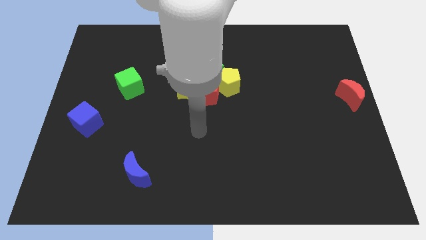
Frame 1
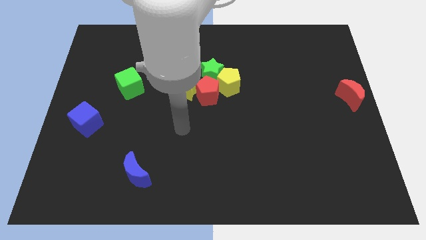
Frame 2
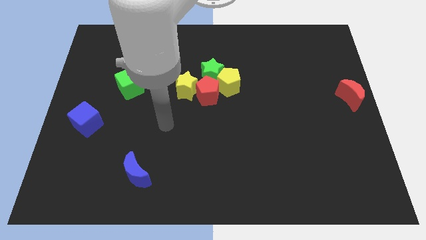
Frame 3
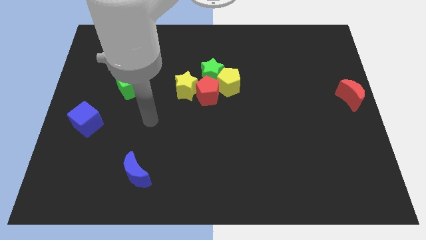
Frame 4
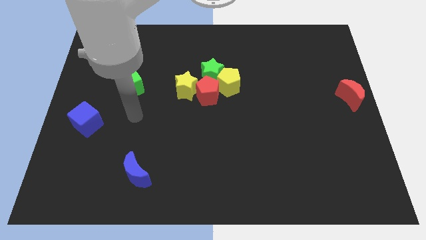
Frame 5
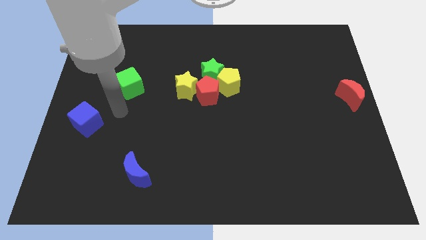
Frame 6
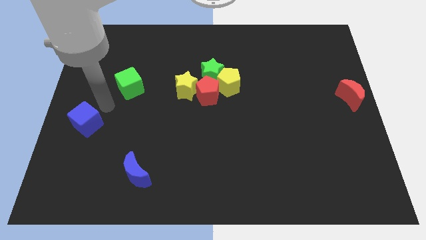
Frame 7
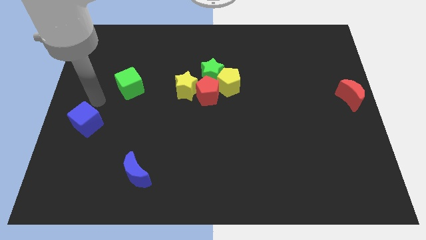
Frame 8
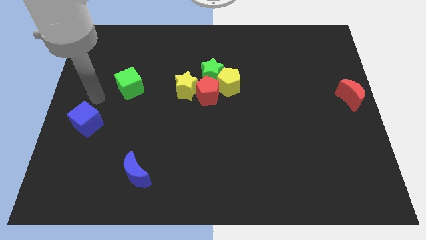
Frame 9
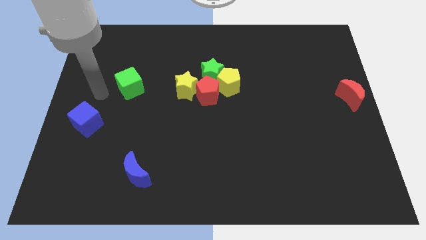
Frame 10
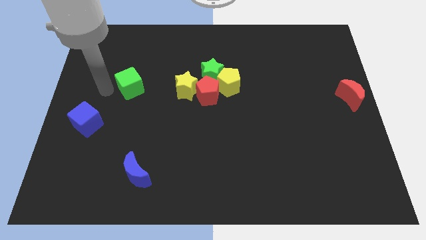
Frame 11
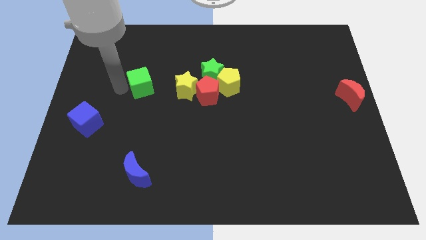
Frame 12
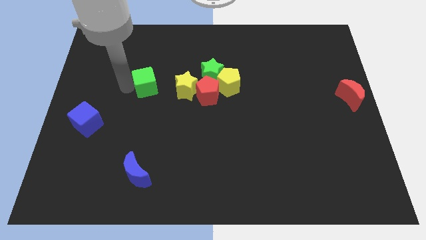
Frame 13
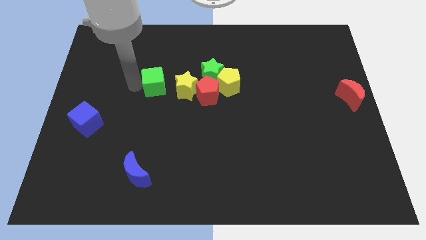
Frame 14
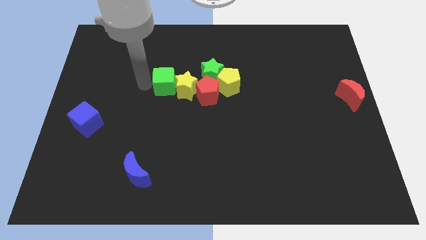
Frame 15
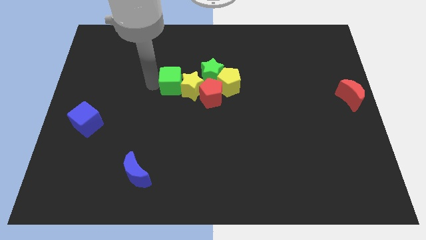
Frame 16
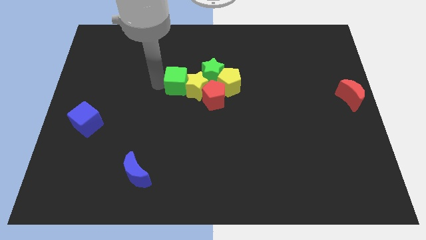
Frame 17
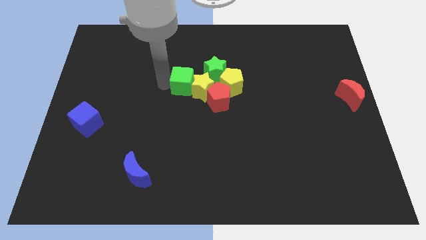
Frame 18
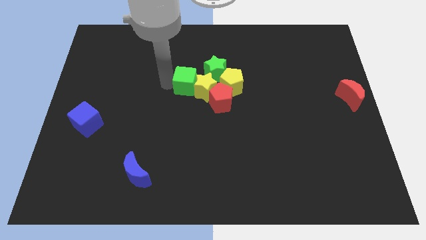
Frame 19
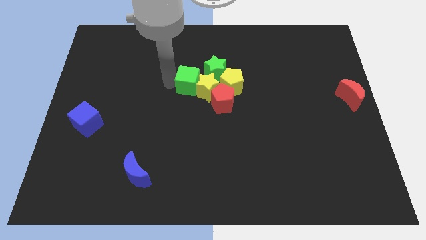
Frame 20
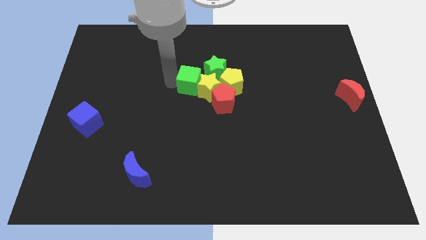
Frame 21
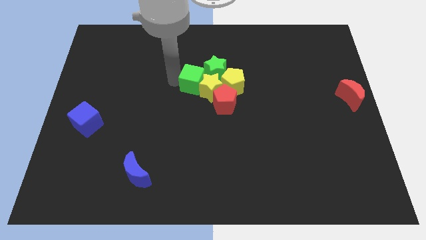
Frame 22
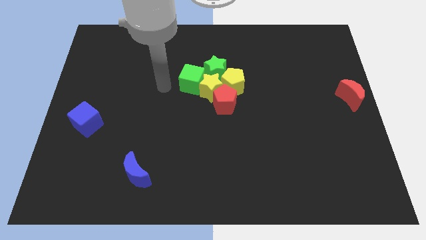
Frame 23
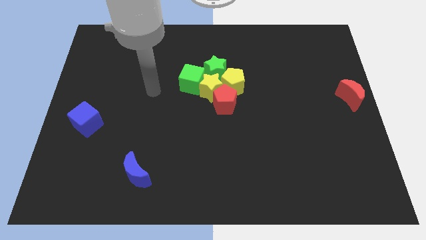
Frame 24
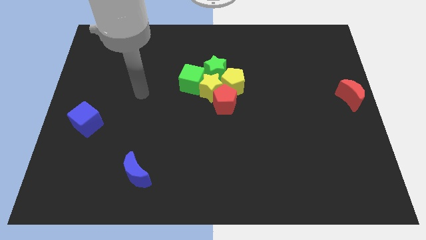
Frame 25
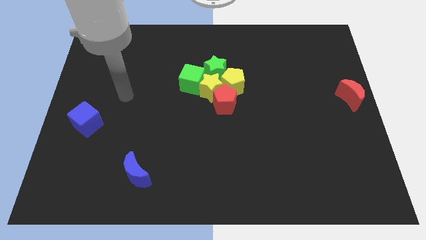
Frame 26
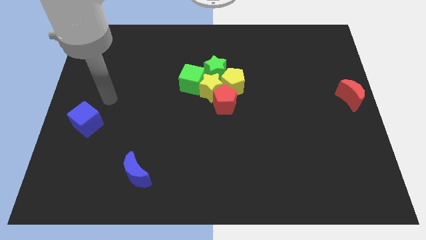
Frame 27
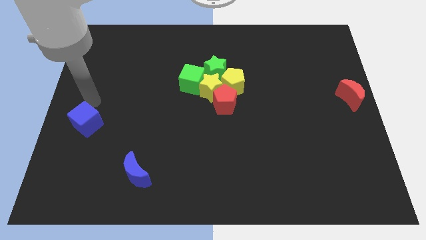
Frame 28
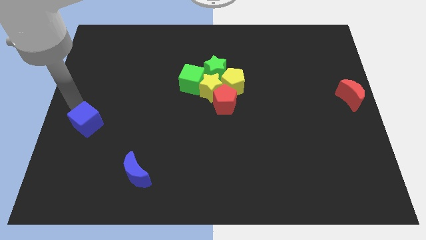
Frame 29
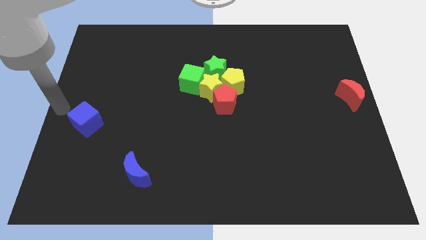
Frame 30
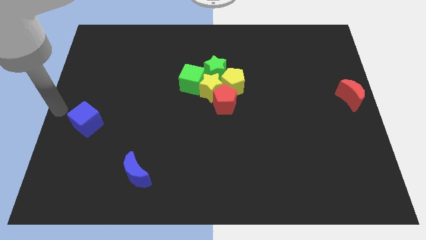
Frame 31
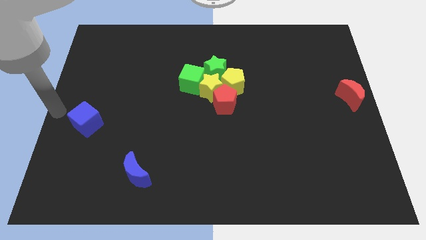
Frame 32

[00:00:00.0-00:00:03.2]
move the green cube into group of blocks

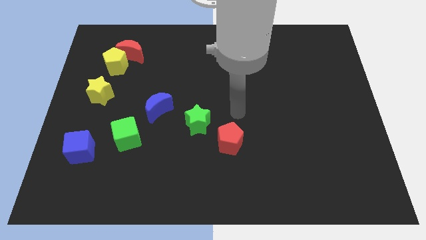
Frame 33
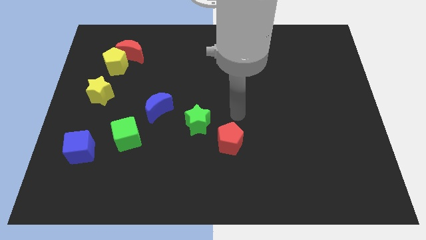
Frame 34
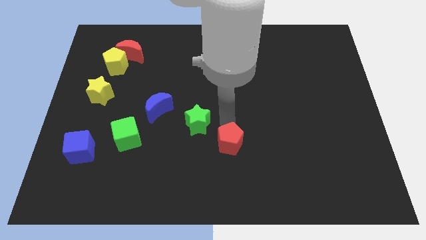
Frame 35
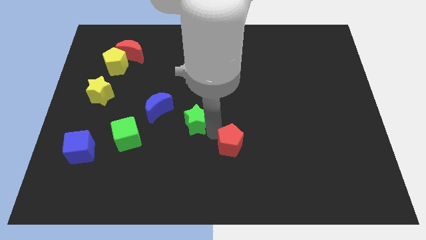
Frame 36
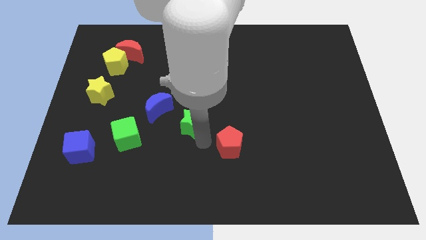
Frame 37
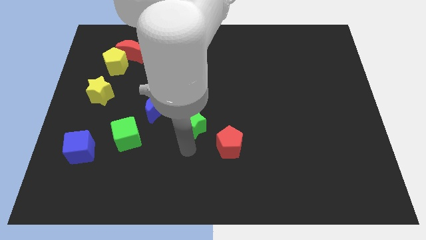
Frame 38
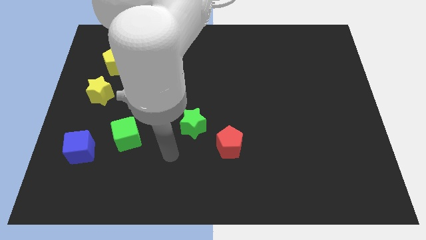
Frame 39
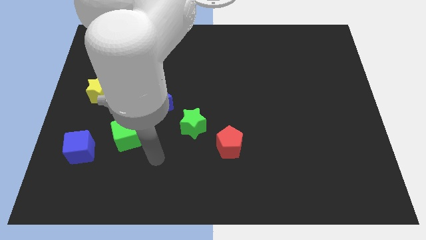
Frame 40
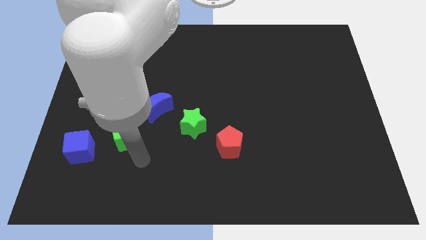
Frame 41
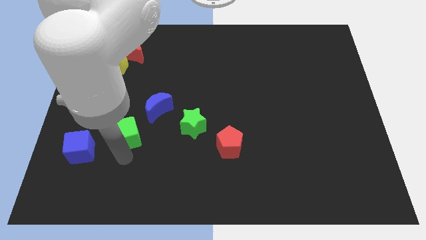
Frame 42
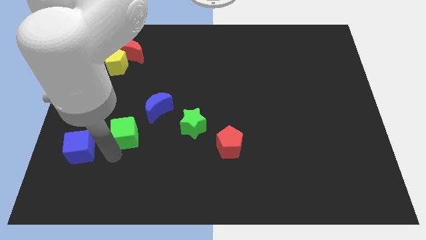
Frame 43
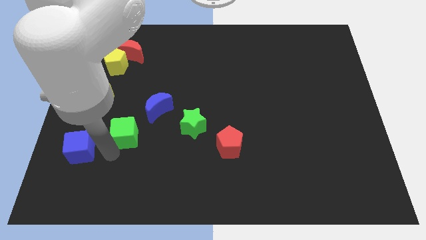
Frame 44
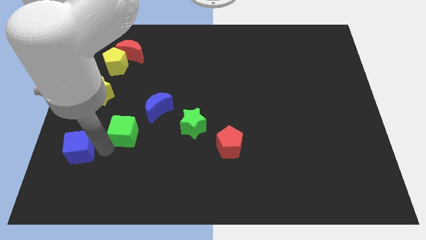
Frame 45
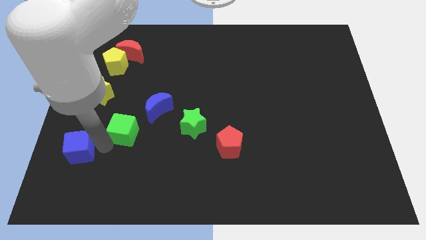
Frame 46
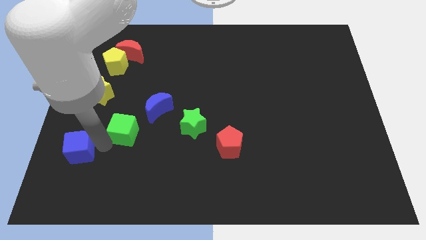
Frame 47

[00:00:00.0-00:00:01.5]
place the green cube diagonally to blue cube

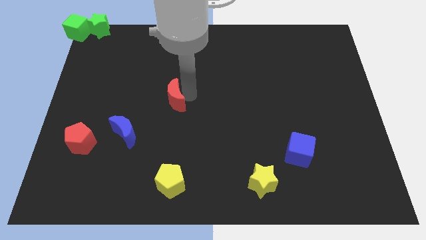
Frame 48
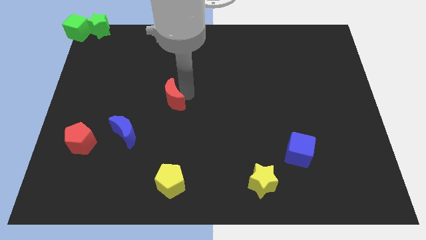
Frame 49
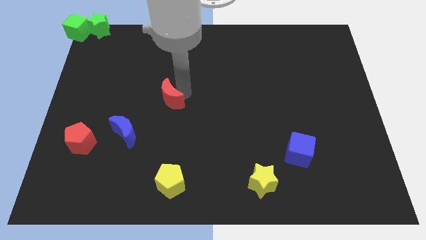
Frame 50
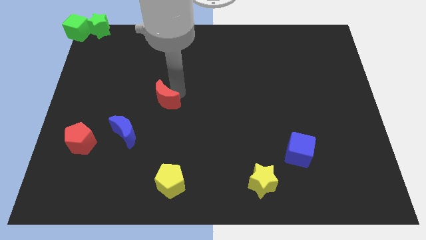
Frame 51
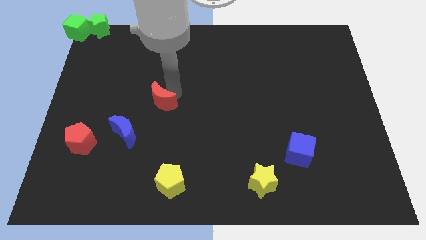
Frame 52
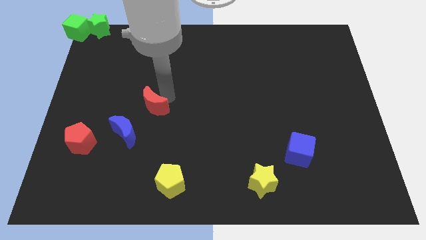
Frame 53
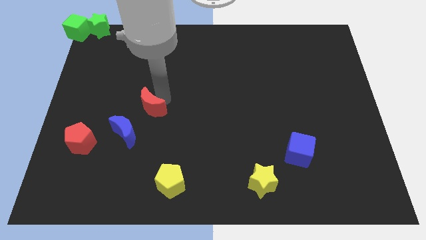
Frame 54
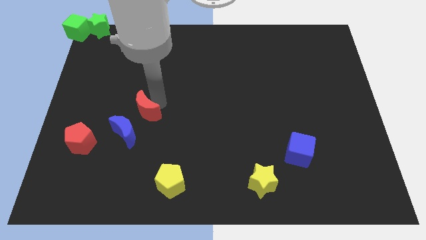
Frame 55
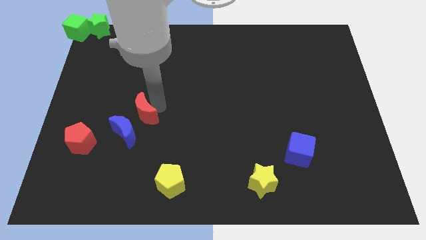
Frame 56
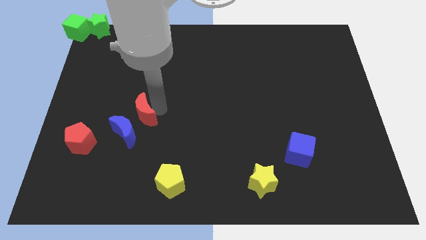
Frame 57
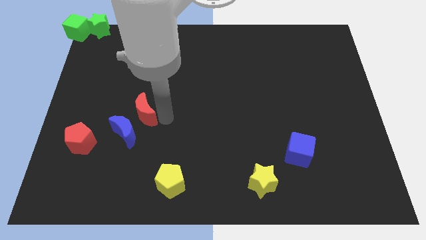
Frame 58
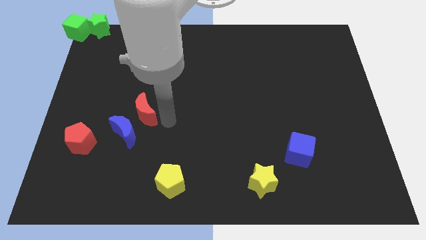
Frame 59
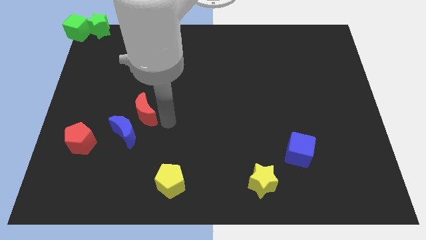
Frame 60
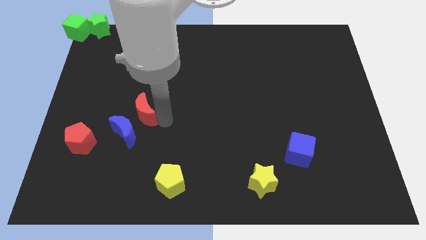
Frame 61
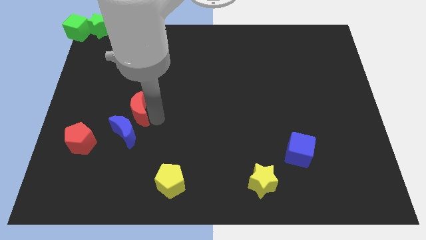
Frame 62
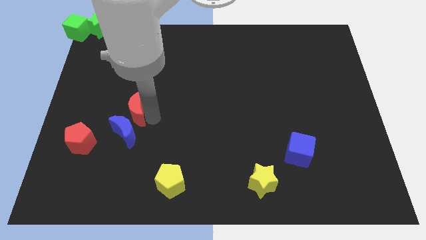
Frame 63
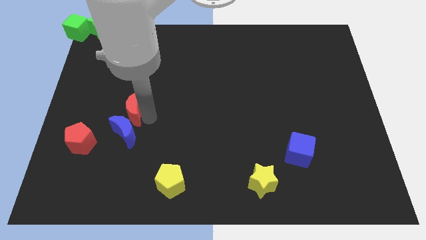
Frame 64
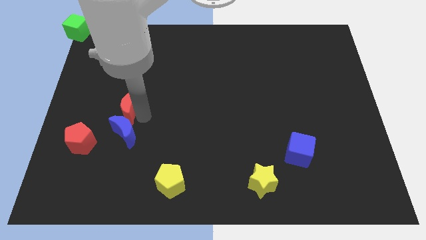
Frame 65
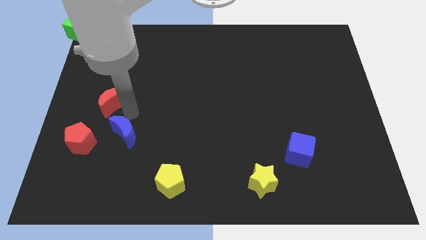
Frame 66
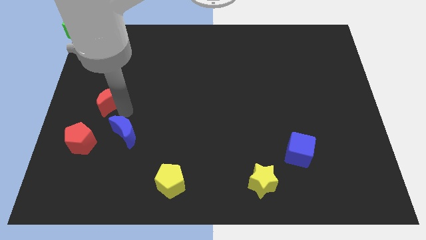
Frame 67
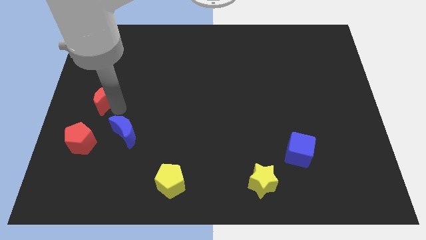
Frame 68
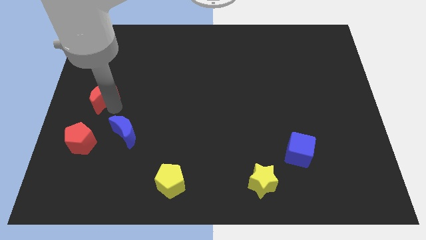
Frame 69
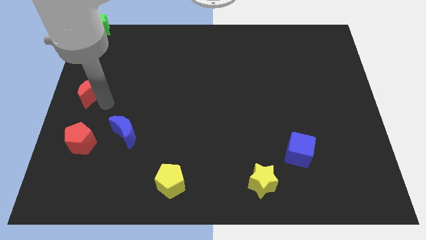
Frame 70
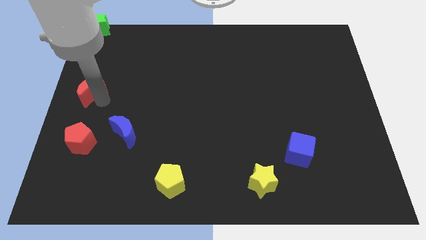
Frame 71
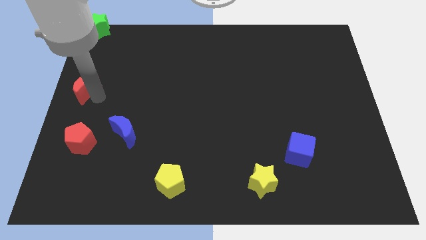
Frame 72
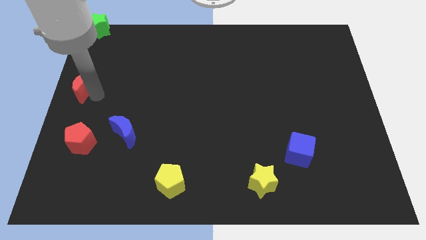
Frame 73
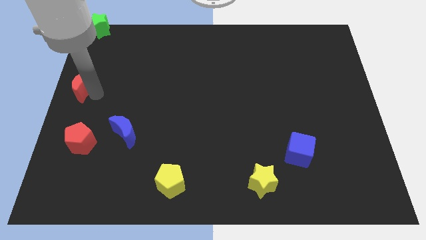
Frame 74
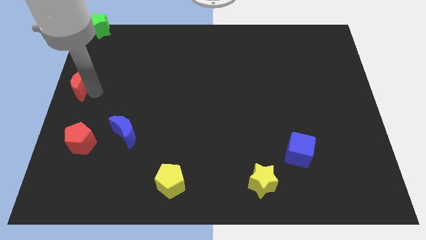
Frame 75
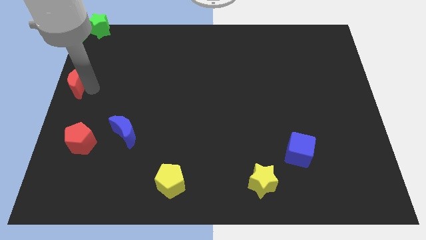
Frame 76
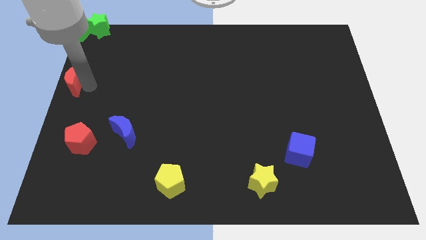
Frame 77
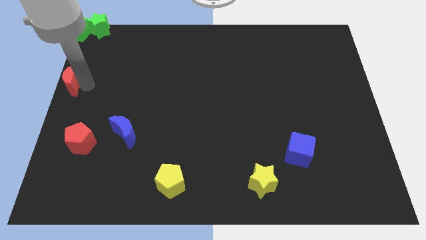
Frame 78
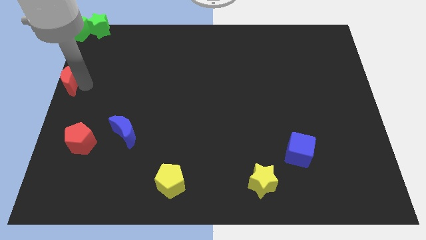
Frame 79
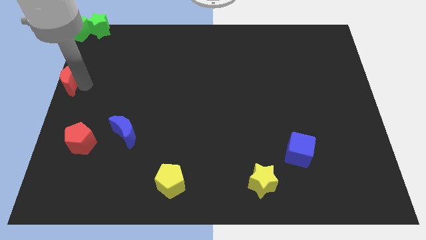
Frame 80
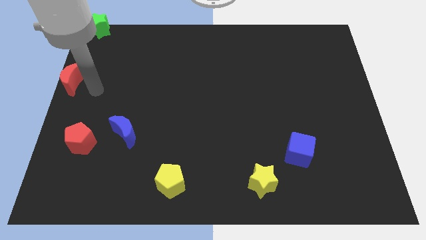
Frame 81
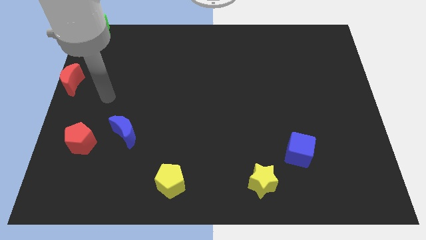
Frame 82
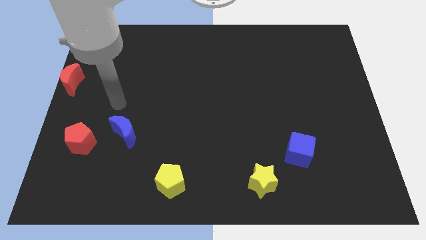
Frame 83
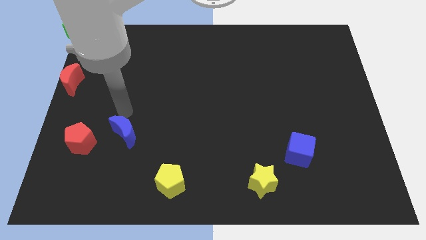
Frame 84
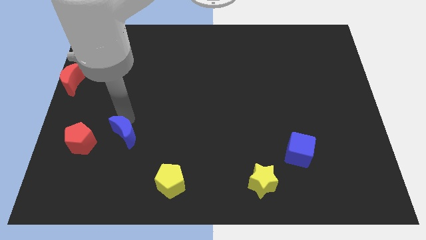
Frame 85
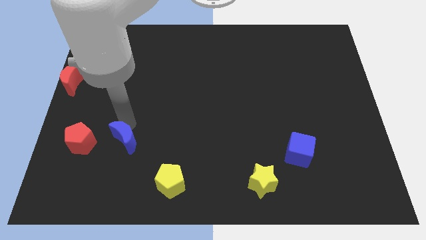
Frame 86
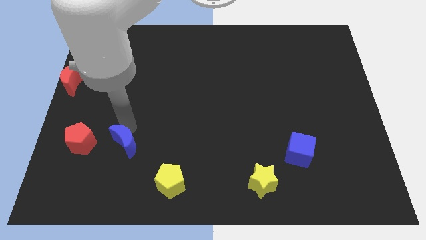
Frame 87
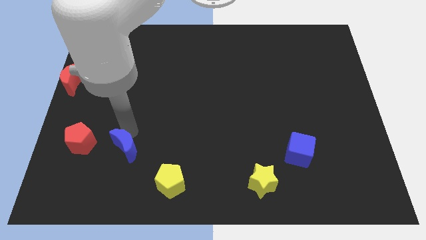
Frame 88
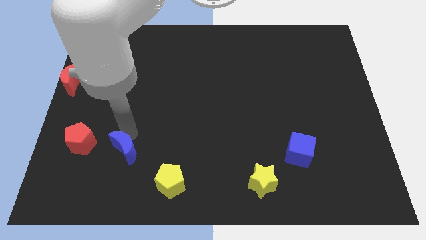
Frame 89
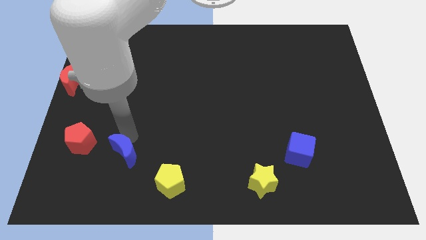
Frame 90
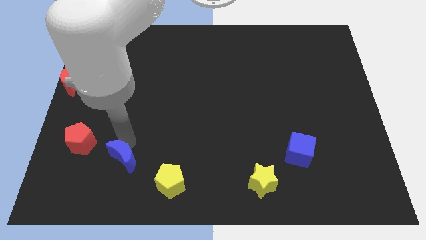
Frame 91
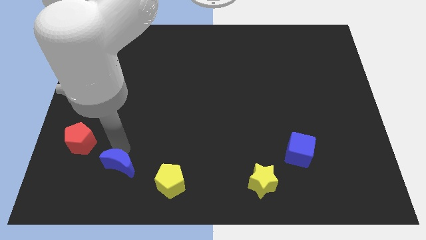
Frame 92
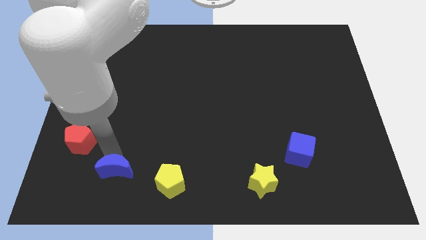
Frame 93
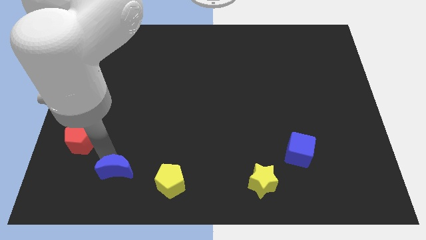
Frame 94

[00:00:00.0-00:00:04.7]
push the red moon to the bottom side of the green cube
